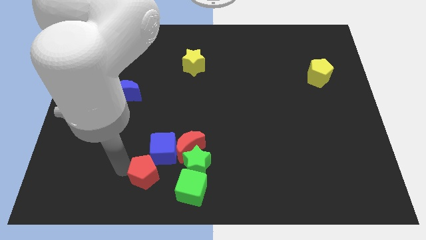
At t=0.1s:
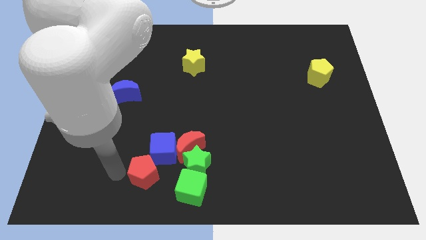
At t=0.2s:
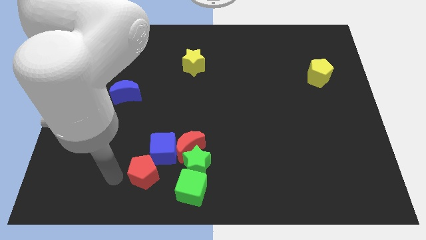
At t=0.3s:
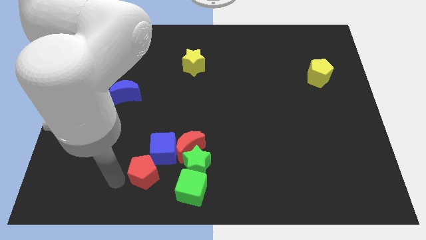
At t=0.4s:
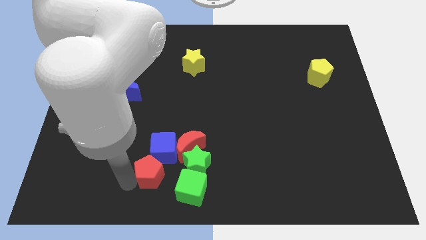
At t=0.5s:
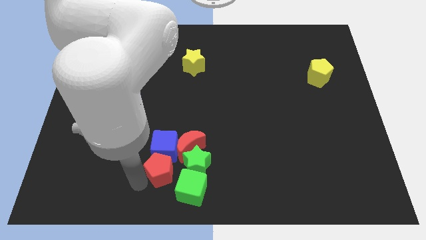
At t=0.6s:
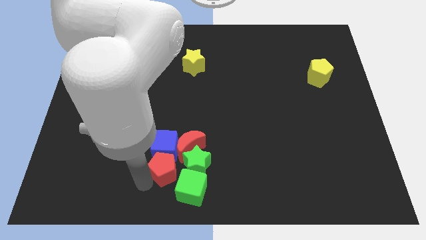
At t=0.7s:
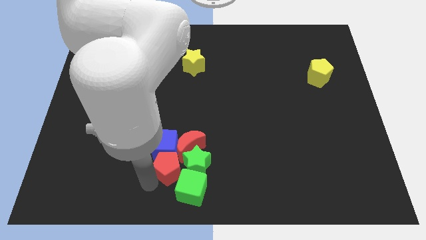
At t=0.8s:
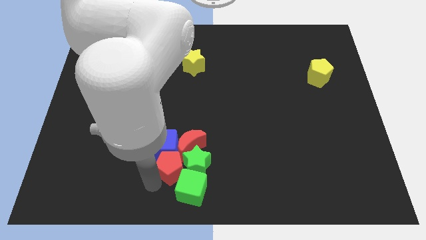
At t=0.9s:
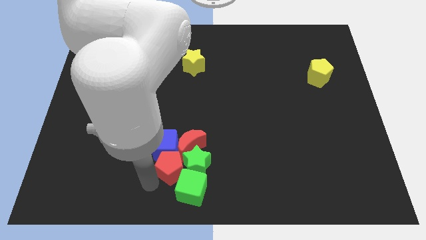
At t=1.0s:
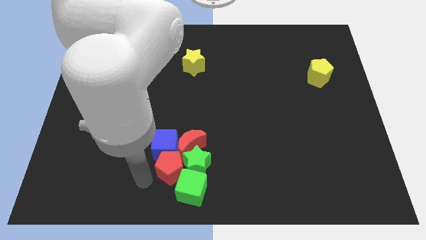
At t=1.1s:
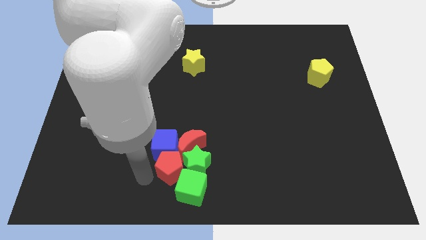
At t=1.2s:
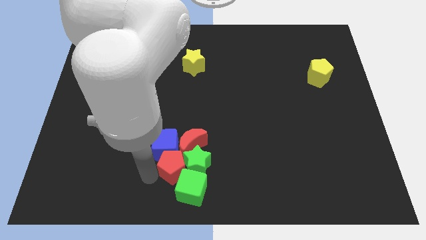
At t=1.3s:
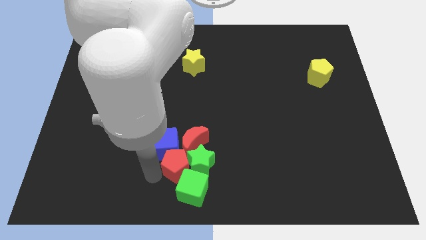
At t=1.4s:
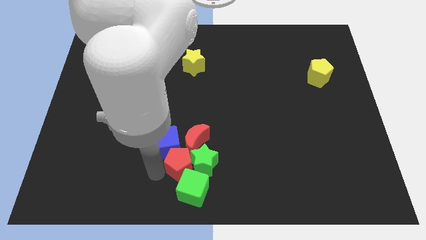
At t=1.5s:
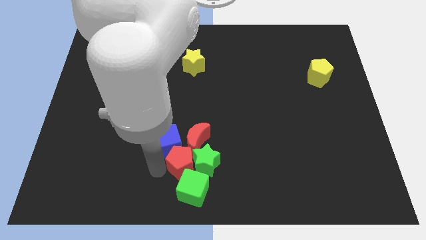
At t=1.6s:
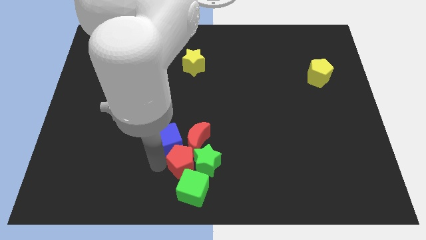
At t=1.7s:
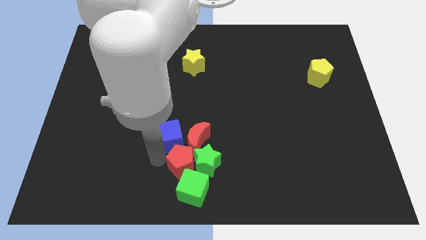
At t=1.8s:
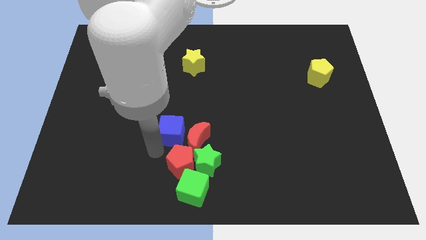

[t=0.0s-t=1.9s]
move the red pentagon left to the green star

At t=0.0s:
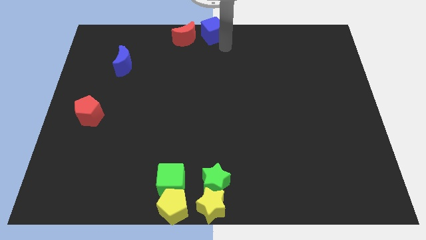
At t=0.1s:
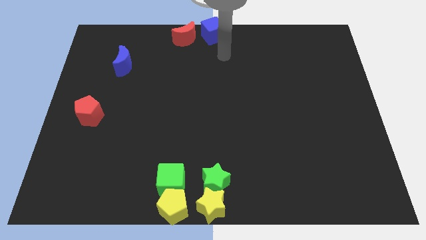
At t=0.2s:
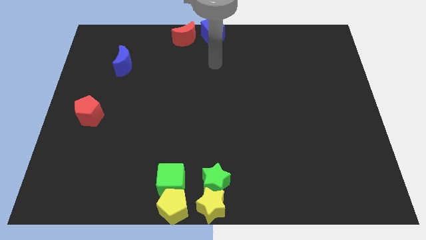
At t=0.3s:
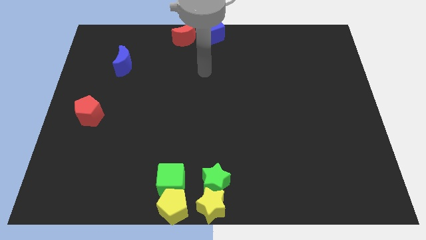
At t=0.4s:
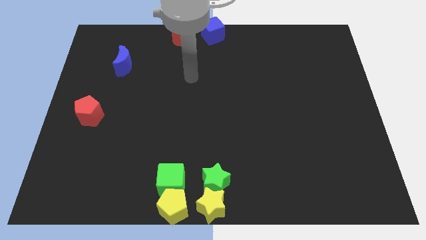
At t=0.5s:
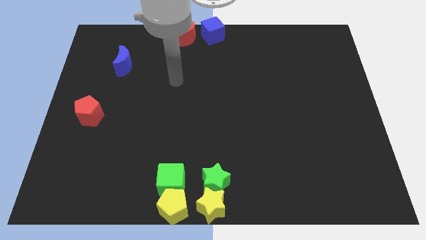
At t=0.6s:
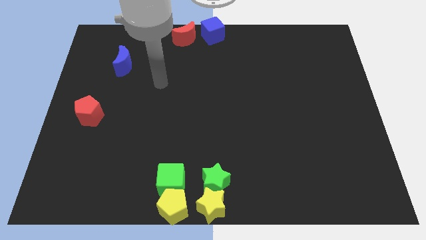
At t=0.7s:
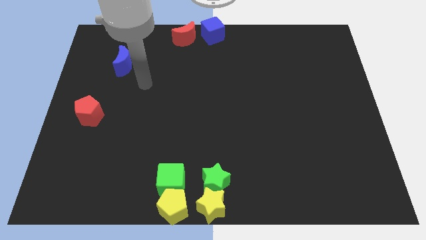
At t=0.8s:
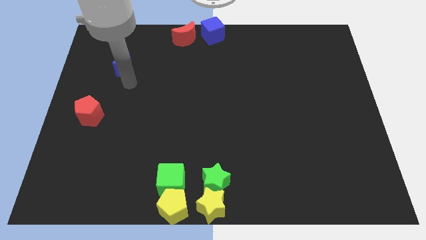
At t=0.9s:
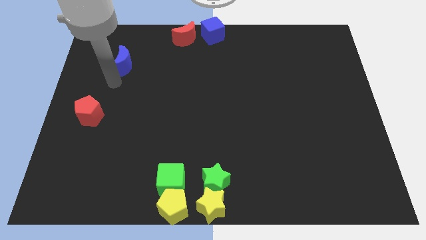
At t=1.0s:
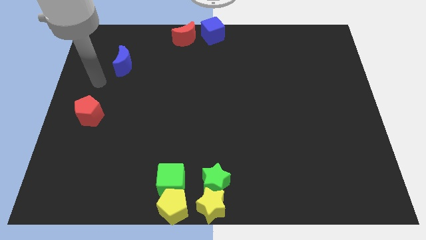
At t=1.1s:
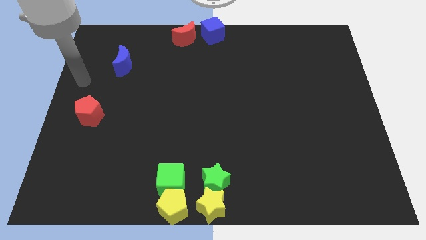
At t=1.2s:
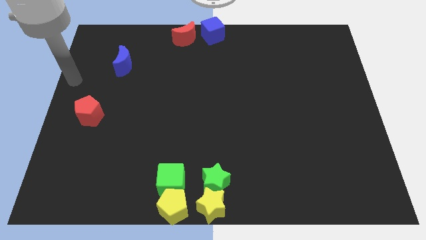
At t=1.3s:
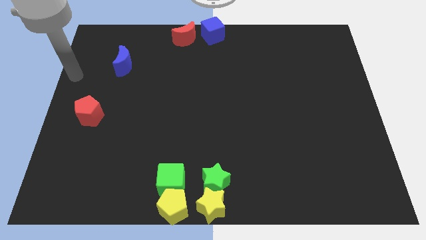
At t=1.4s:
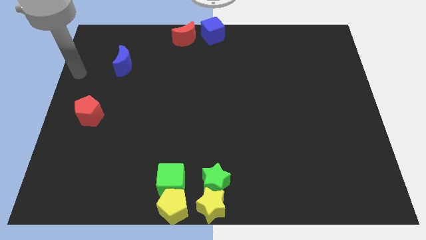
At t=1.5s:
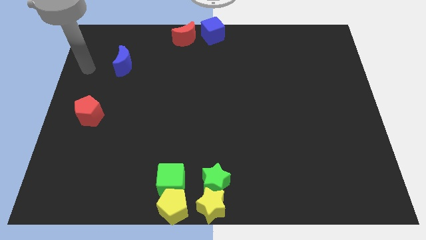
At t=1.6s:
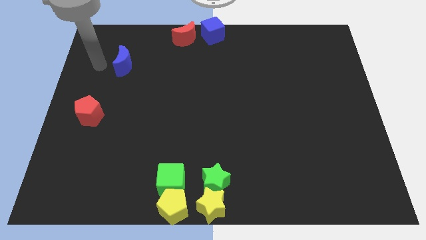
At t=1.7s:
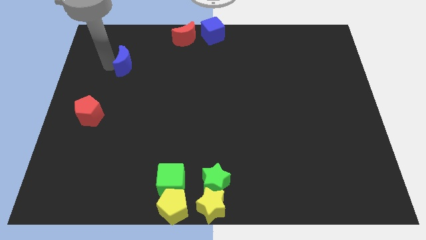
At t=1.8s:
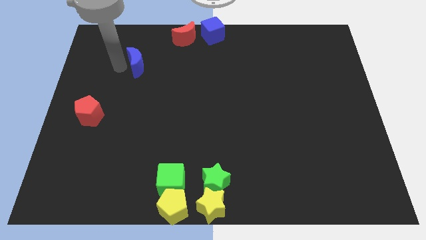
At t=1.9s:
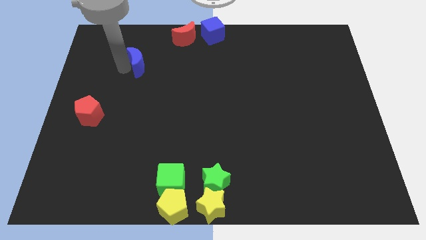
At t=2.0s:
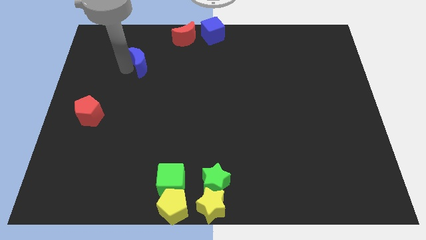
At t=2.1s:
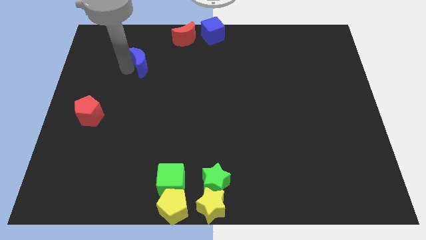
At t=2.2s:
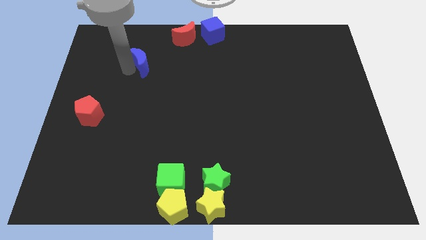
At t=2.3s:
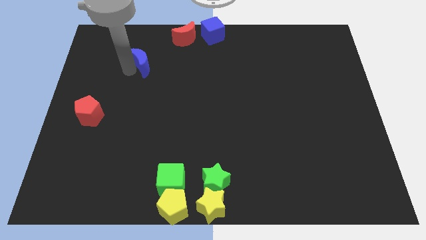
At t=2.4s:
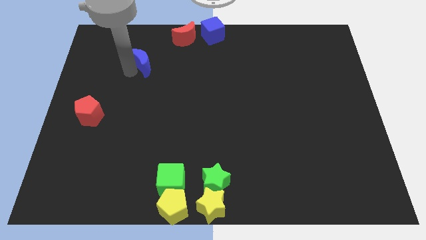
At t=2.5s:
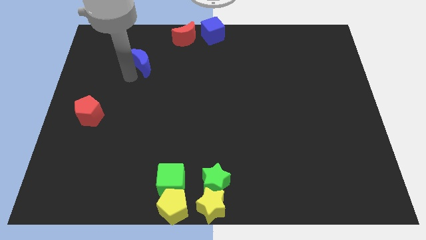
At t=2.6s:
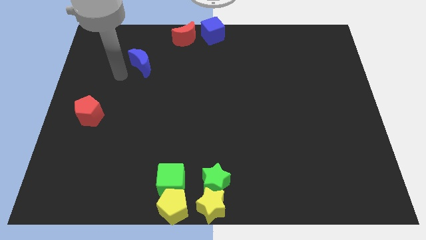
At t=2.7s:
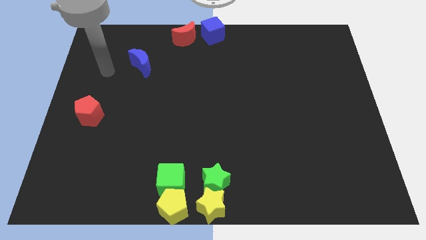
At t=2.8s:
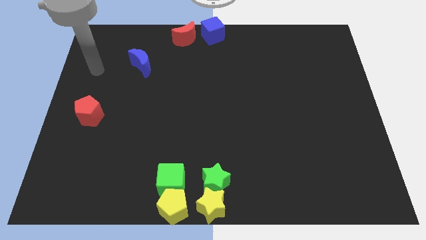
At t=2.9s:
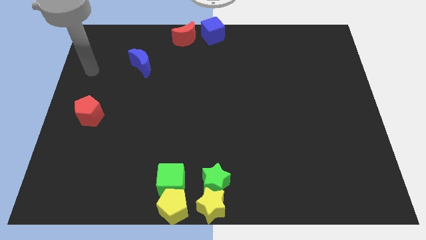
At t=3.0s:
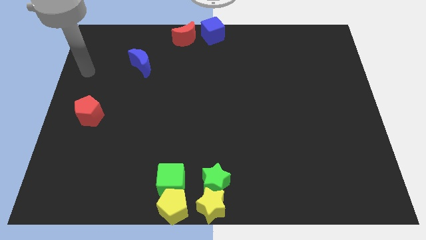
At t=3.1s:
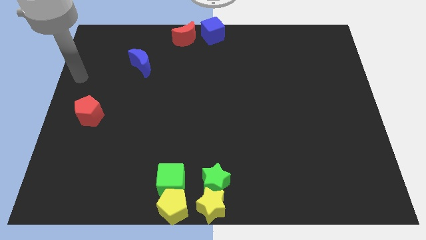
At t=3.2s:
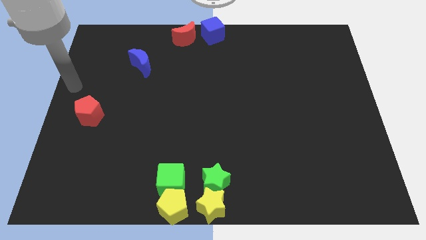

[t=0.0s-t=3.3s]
push blue moon towards right slightly

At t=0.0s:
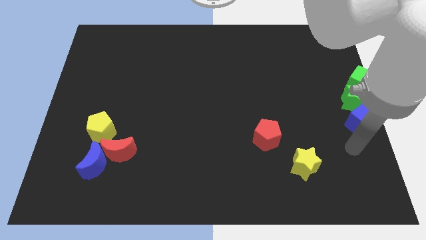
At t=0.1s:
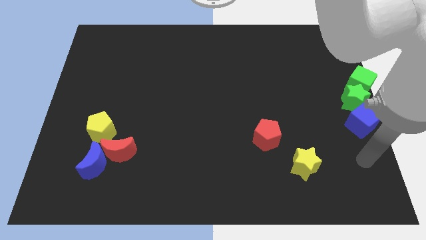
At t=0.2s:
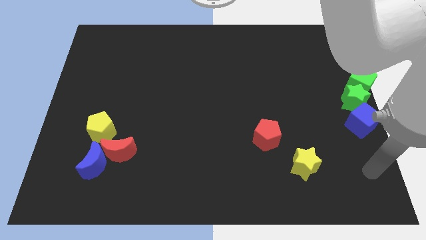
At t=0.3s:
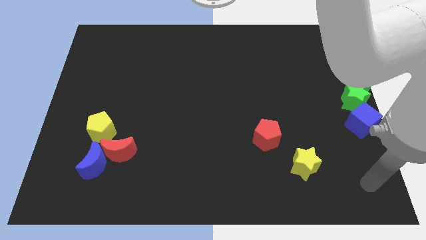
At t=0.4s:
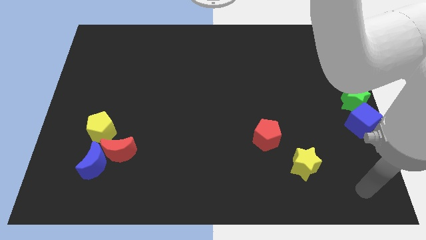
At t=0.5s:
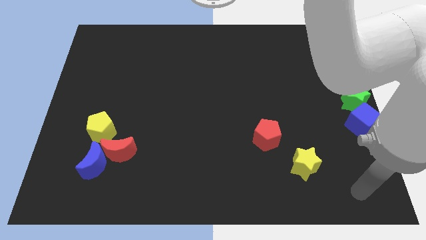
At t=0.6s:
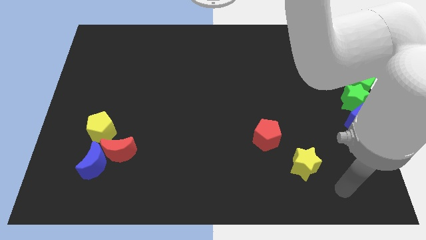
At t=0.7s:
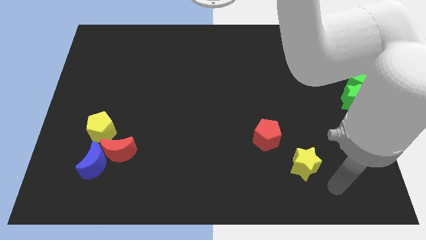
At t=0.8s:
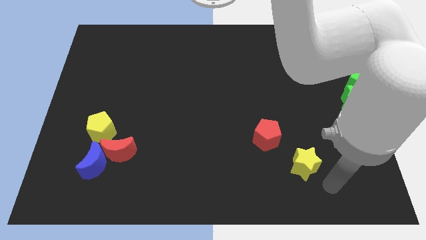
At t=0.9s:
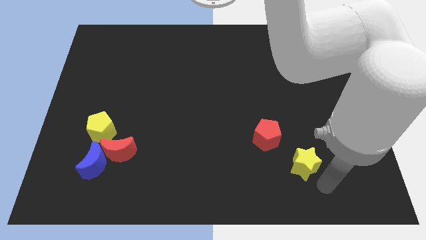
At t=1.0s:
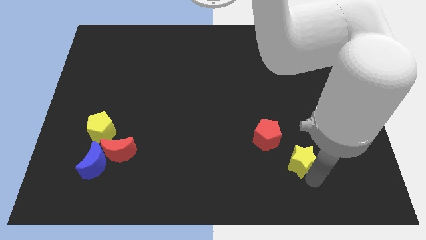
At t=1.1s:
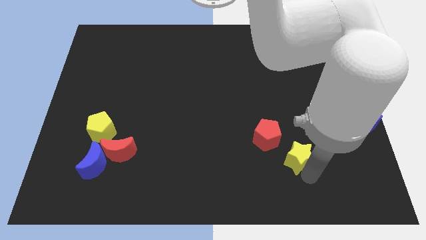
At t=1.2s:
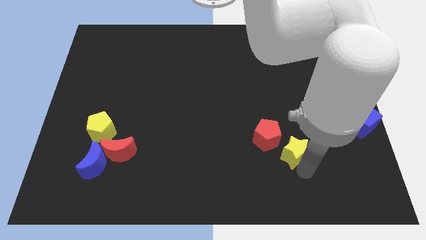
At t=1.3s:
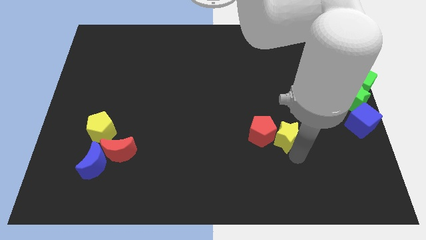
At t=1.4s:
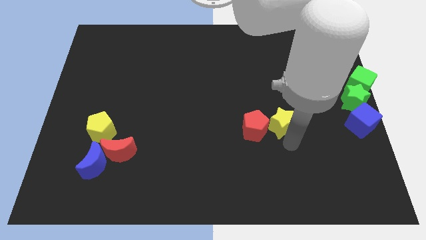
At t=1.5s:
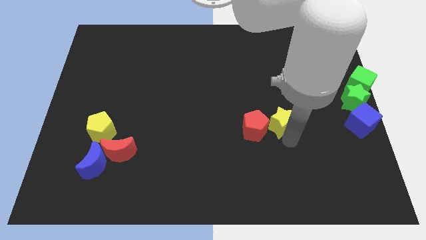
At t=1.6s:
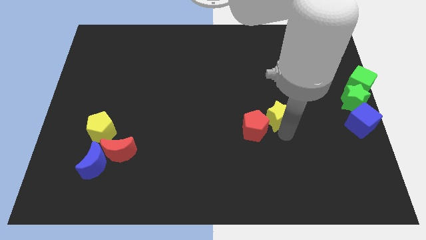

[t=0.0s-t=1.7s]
place yellow star to the right of red pentagon

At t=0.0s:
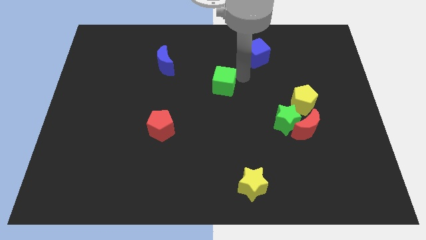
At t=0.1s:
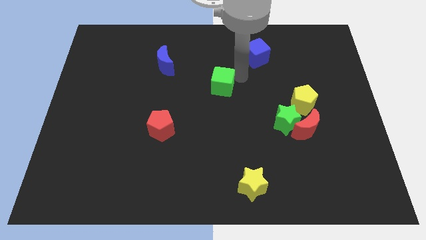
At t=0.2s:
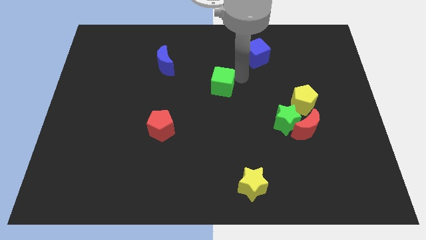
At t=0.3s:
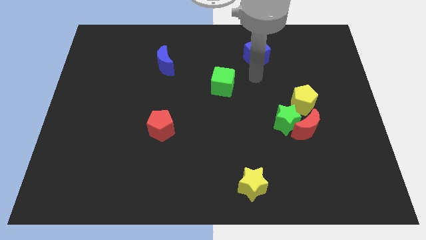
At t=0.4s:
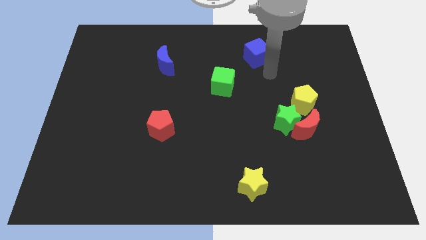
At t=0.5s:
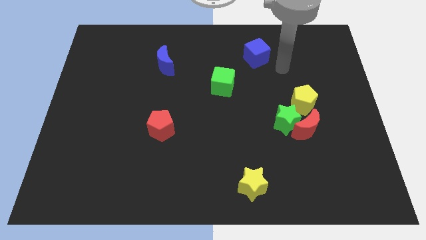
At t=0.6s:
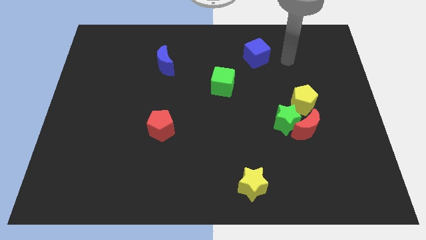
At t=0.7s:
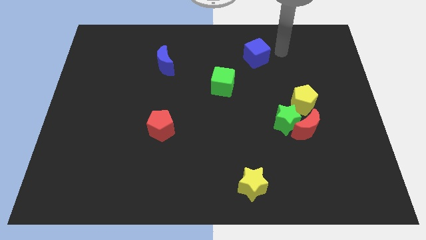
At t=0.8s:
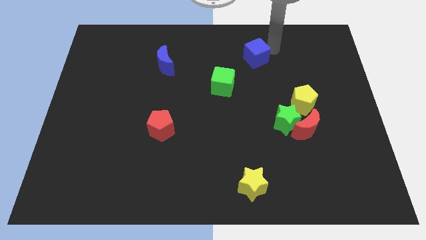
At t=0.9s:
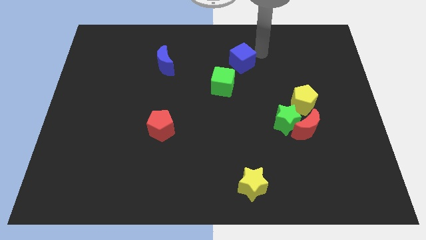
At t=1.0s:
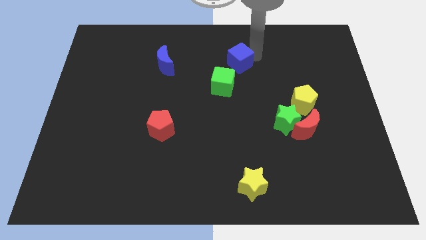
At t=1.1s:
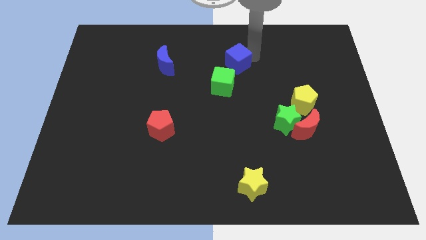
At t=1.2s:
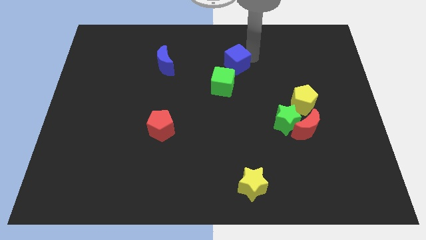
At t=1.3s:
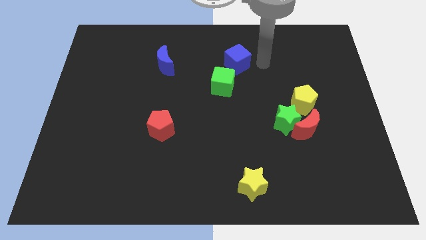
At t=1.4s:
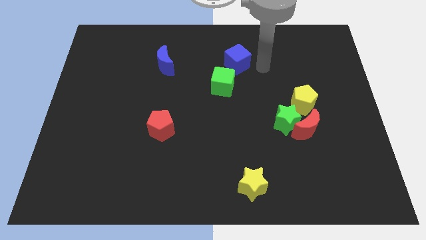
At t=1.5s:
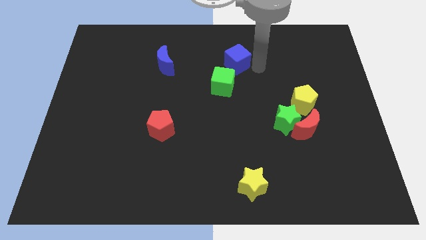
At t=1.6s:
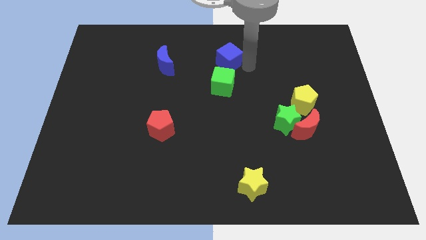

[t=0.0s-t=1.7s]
place the blue cube above the green cube
